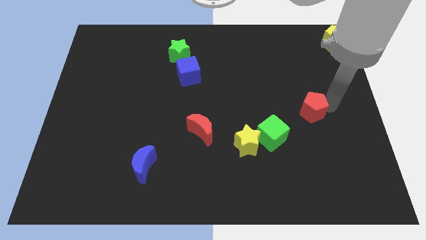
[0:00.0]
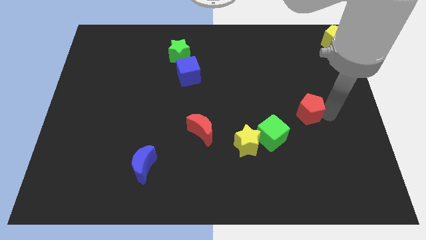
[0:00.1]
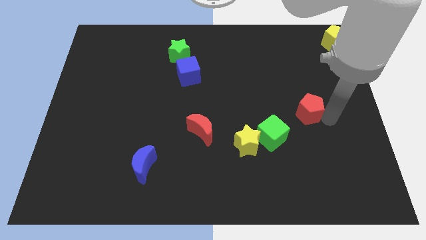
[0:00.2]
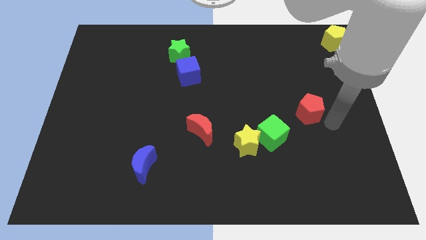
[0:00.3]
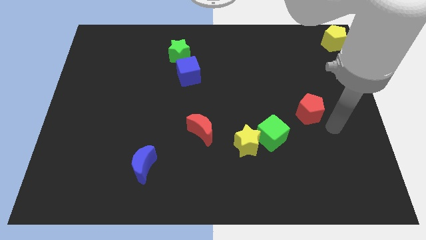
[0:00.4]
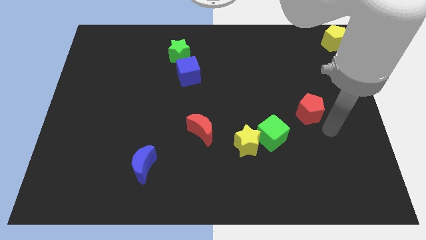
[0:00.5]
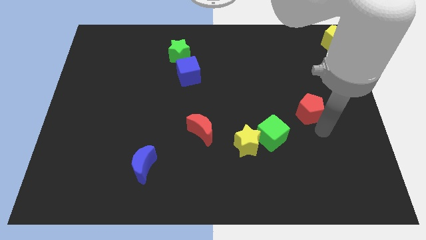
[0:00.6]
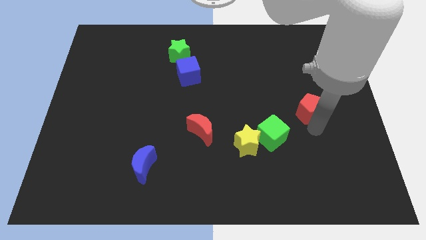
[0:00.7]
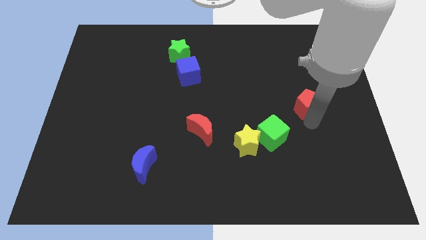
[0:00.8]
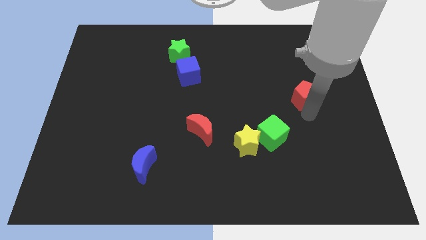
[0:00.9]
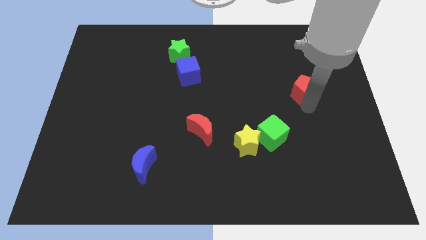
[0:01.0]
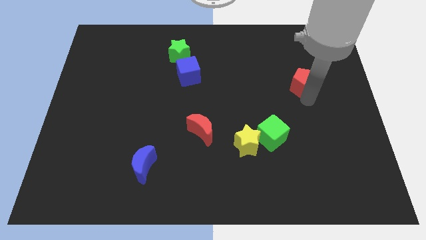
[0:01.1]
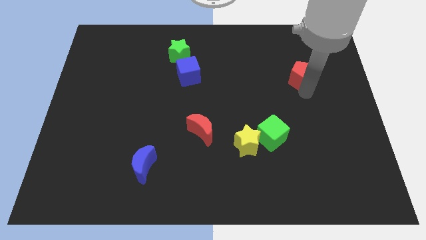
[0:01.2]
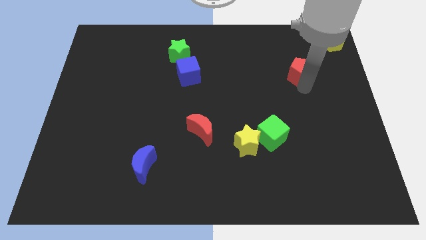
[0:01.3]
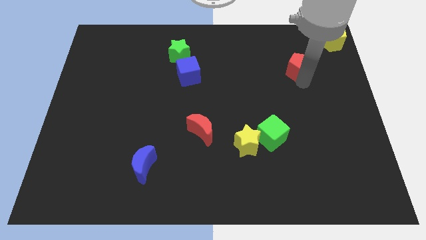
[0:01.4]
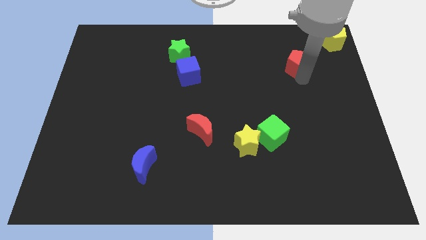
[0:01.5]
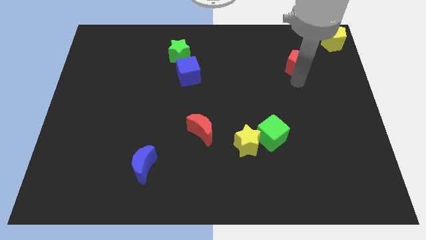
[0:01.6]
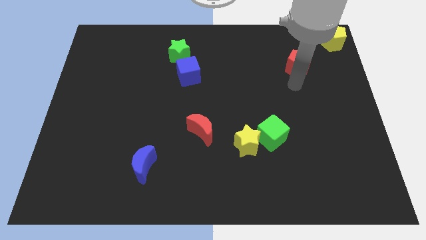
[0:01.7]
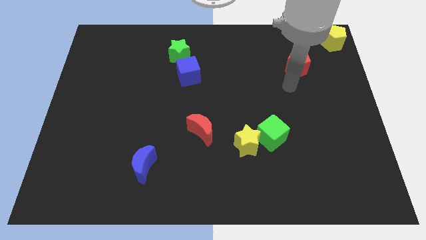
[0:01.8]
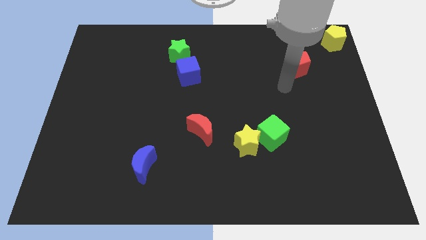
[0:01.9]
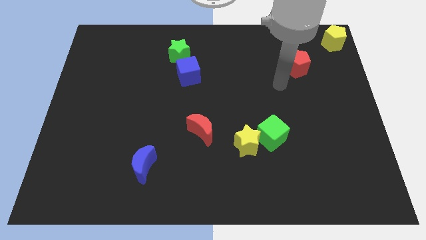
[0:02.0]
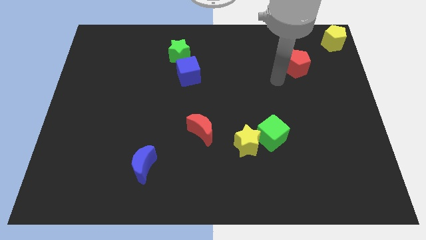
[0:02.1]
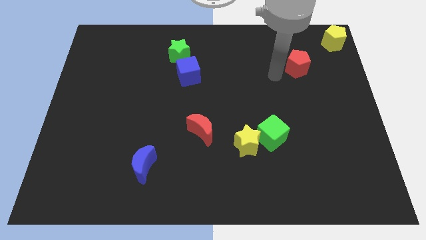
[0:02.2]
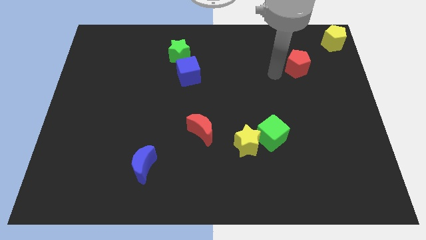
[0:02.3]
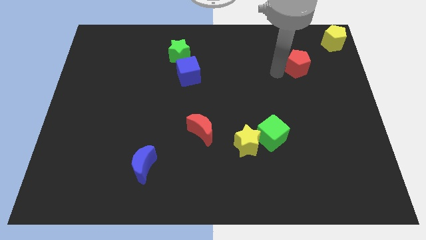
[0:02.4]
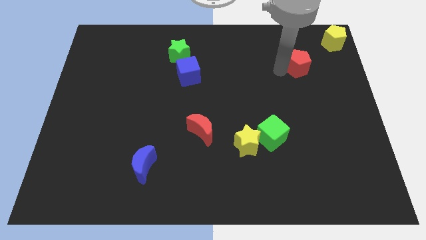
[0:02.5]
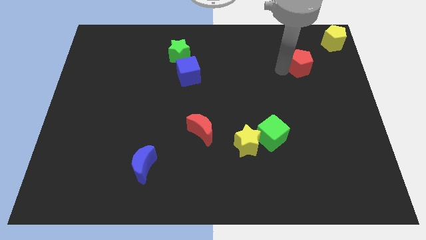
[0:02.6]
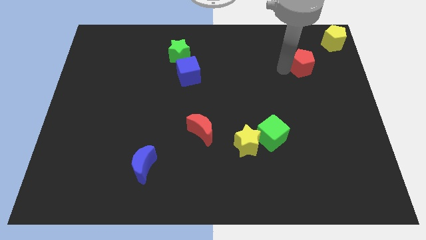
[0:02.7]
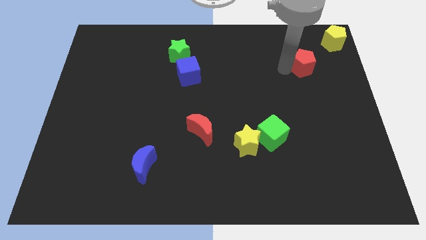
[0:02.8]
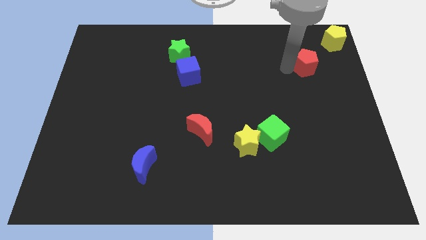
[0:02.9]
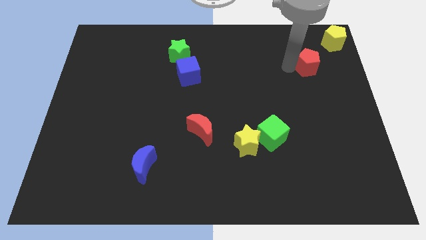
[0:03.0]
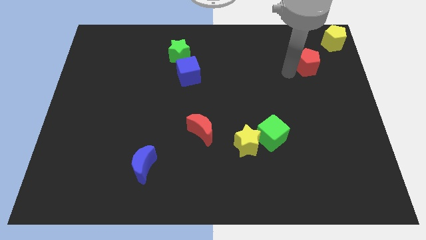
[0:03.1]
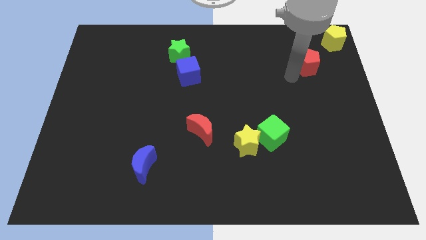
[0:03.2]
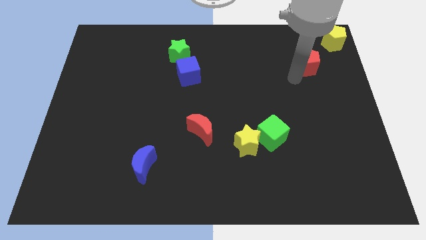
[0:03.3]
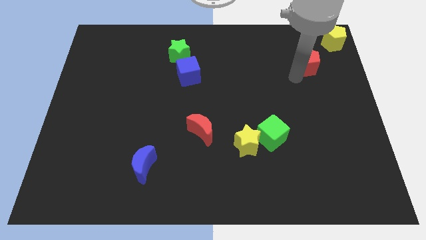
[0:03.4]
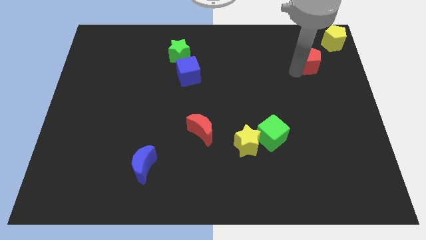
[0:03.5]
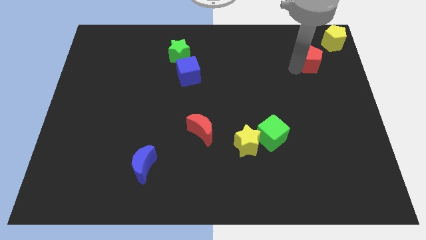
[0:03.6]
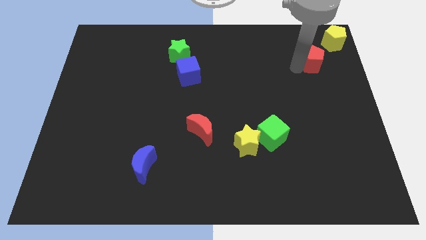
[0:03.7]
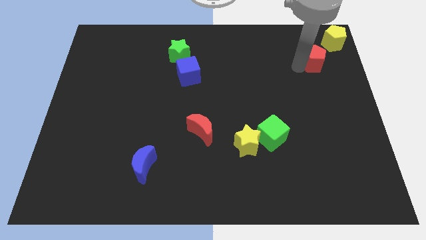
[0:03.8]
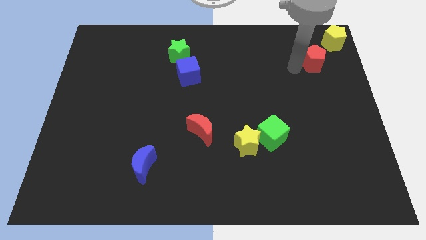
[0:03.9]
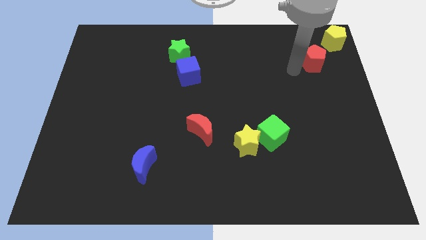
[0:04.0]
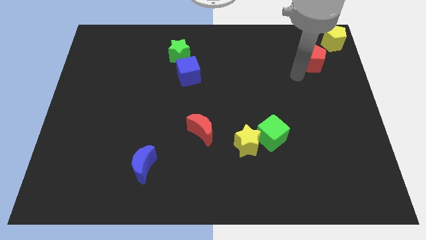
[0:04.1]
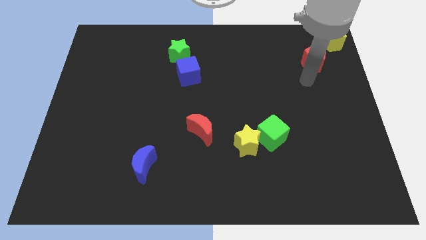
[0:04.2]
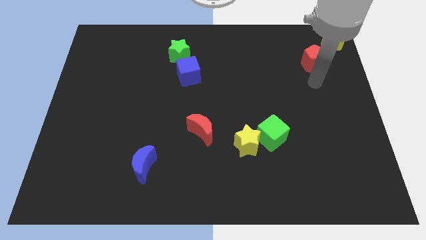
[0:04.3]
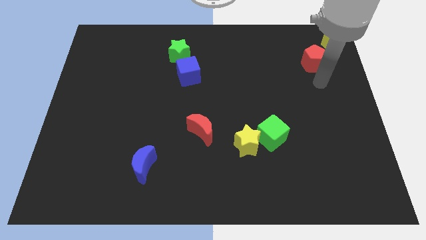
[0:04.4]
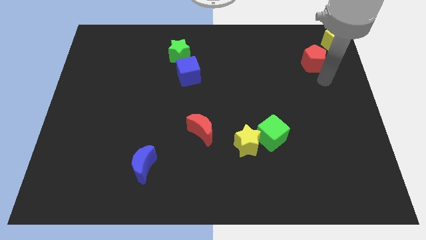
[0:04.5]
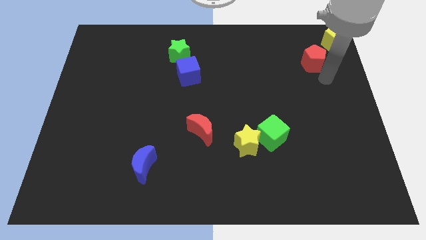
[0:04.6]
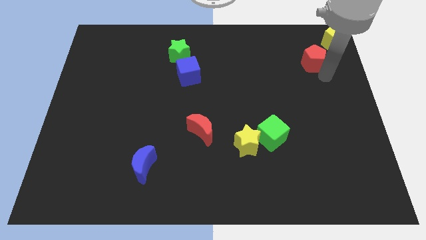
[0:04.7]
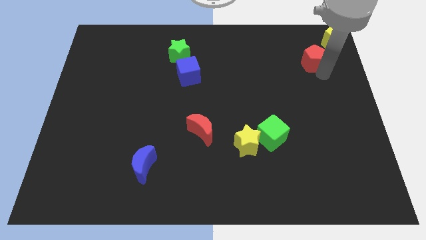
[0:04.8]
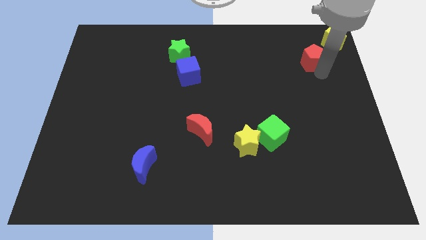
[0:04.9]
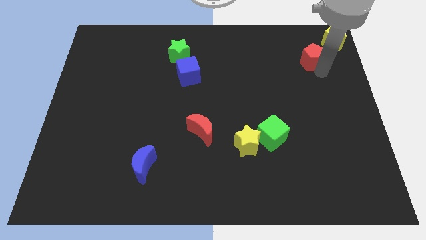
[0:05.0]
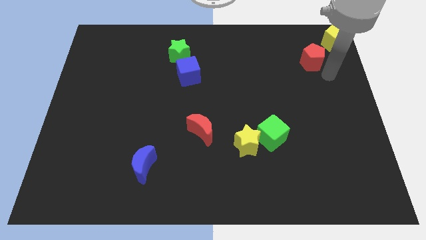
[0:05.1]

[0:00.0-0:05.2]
move the red pentagon towards the bottom left side of the yellow pentagon

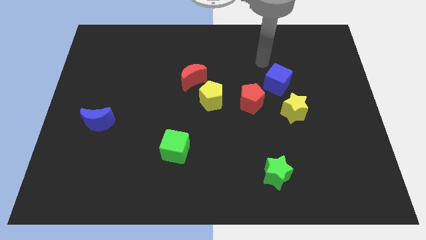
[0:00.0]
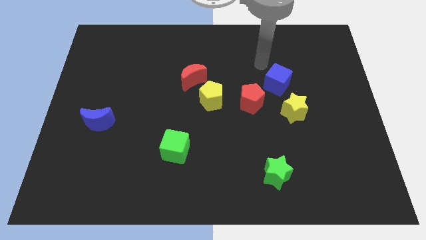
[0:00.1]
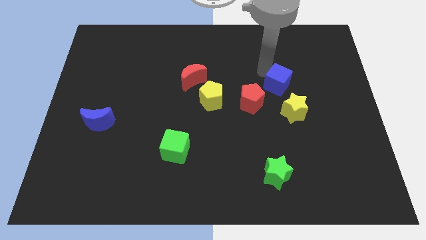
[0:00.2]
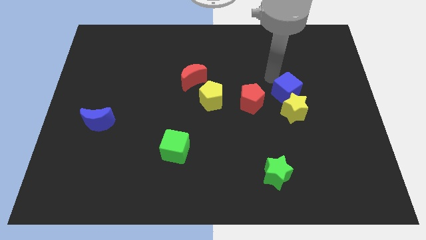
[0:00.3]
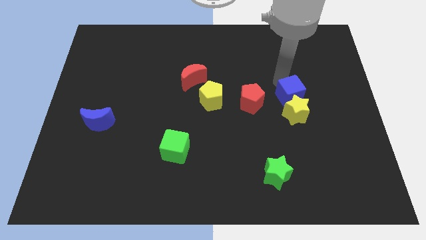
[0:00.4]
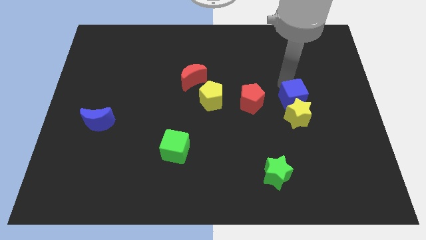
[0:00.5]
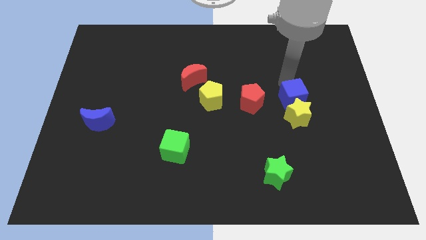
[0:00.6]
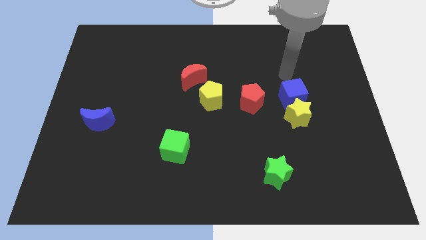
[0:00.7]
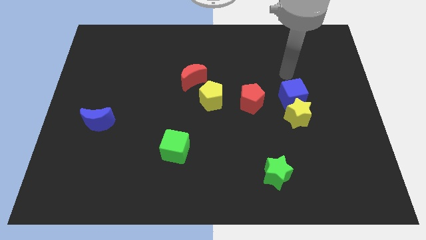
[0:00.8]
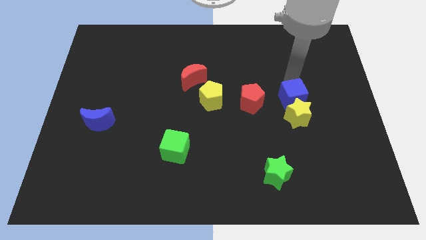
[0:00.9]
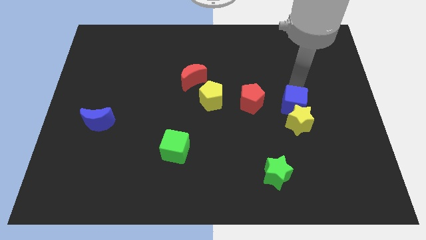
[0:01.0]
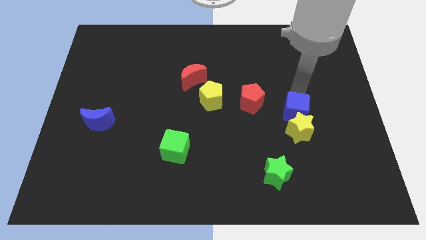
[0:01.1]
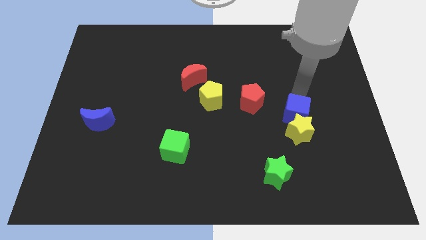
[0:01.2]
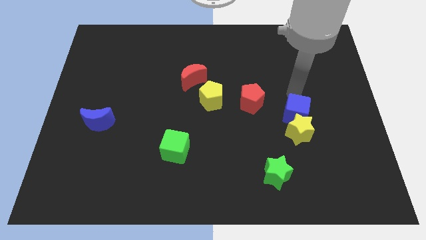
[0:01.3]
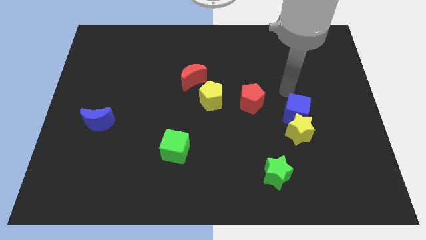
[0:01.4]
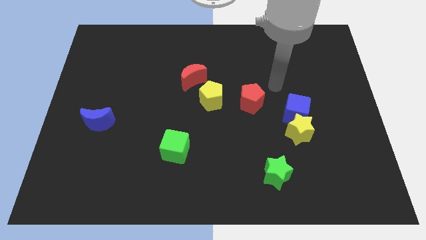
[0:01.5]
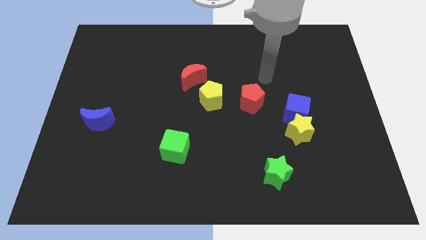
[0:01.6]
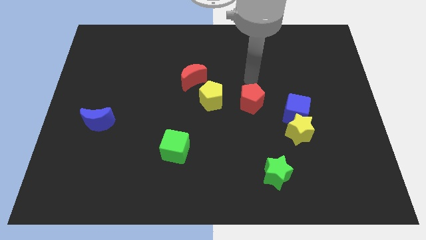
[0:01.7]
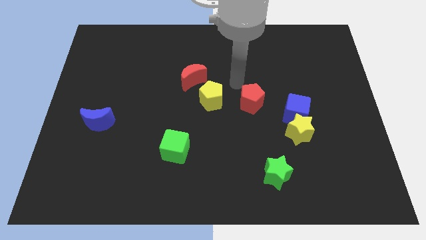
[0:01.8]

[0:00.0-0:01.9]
place blue cube to the right of red pentagon

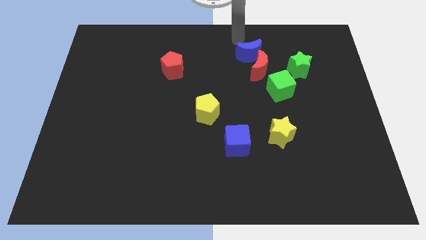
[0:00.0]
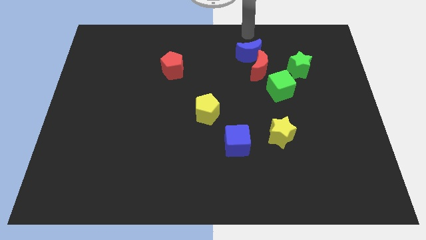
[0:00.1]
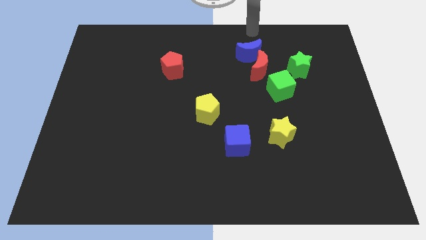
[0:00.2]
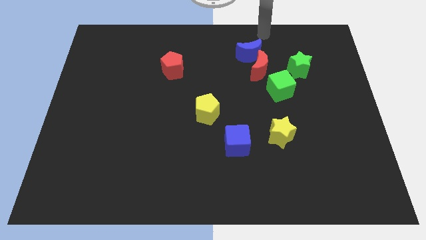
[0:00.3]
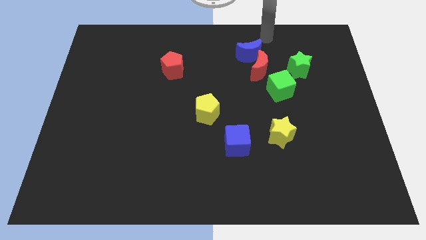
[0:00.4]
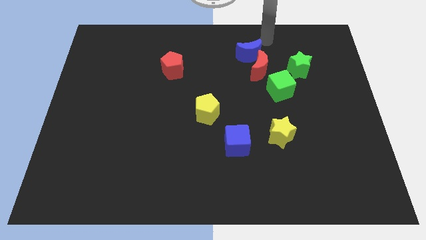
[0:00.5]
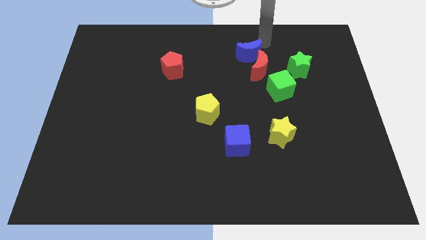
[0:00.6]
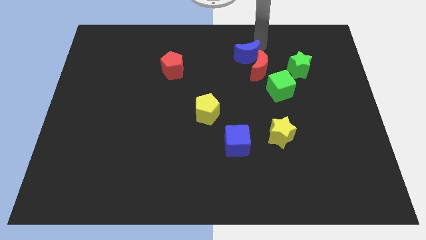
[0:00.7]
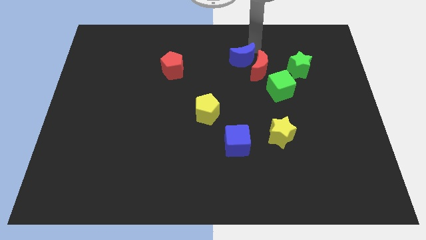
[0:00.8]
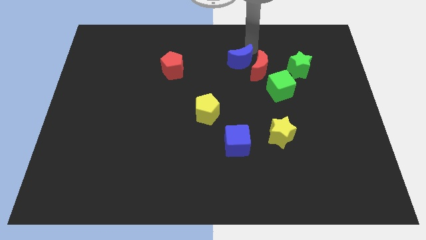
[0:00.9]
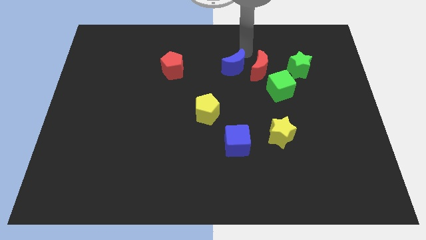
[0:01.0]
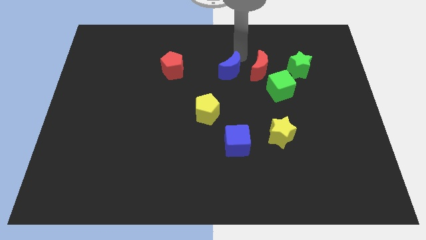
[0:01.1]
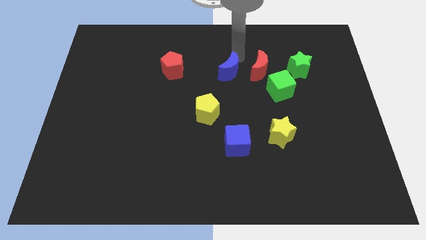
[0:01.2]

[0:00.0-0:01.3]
place the blue moon to the left side of the red moon

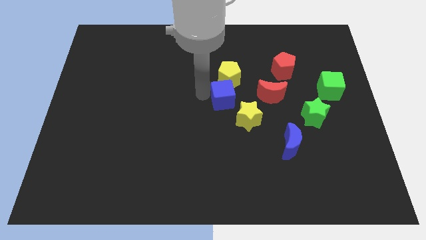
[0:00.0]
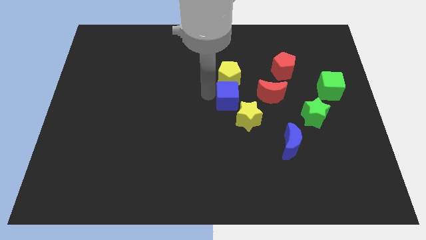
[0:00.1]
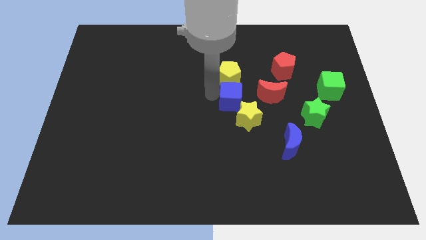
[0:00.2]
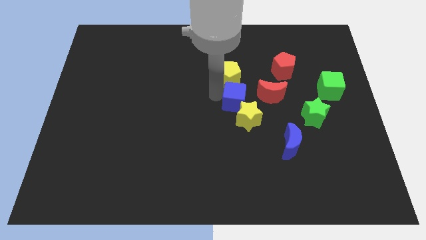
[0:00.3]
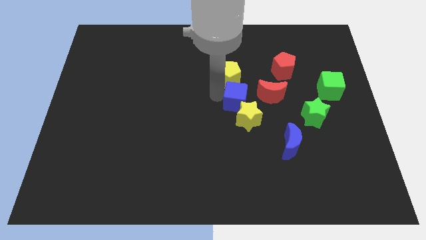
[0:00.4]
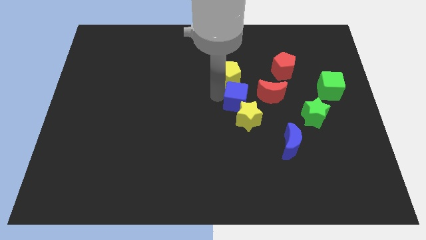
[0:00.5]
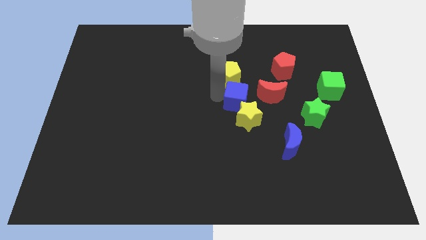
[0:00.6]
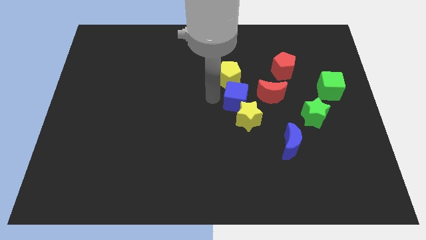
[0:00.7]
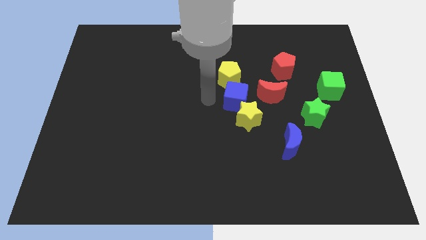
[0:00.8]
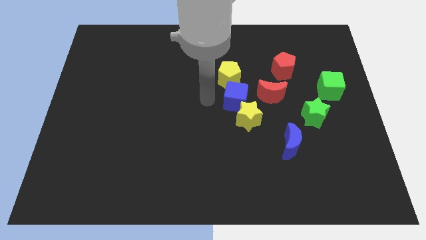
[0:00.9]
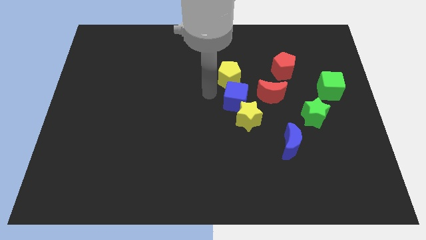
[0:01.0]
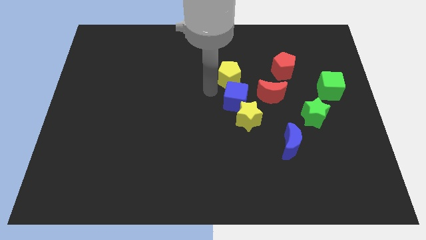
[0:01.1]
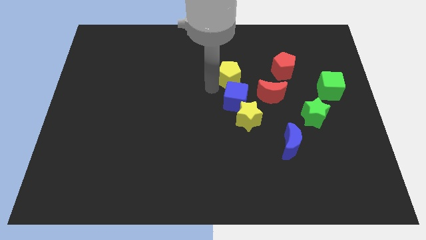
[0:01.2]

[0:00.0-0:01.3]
place the blue cube in between the yellow blocks
